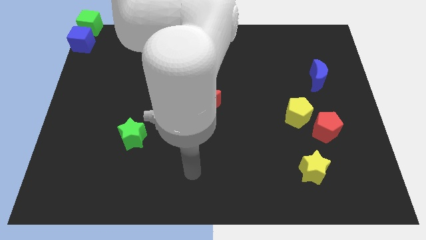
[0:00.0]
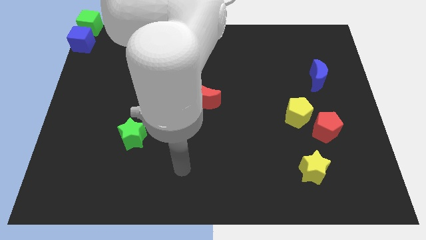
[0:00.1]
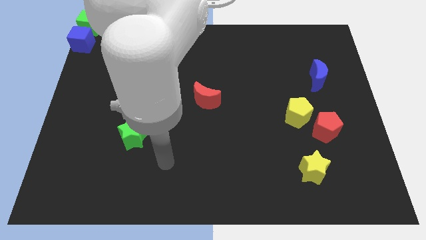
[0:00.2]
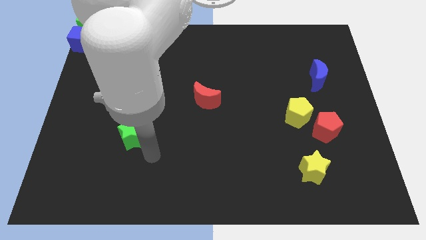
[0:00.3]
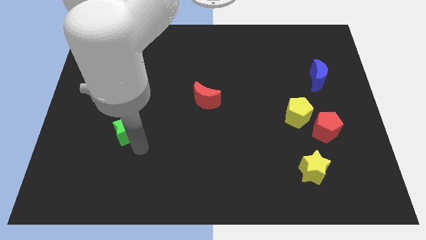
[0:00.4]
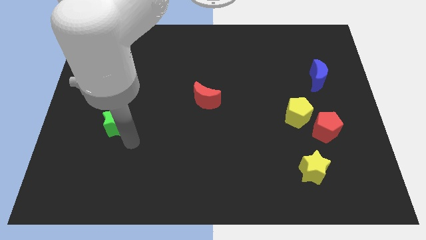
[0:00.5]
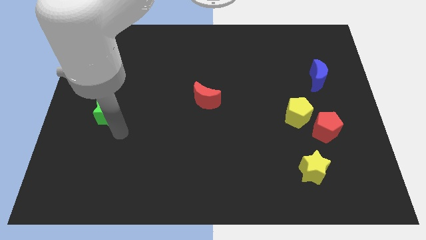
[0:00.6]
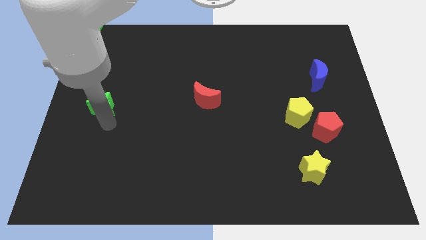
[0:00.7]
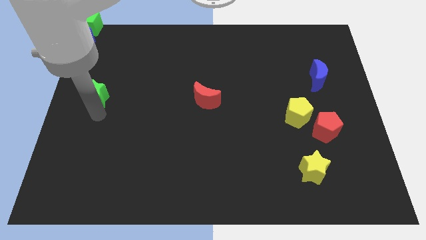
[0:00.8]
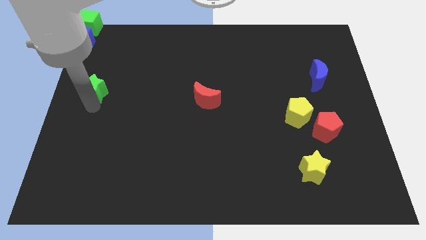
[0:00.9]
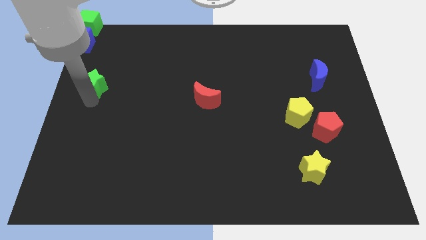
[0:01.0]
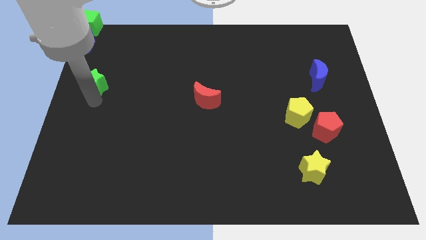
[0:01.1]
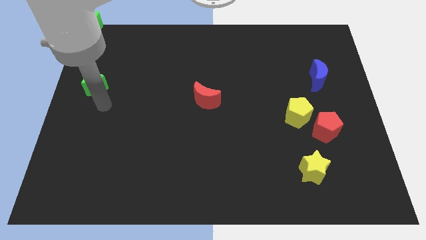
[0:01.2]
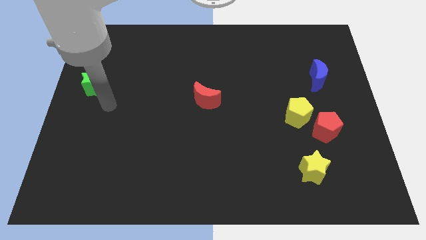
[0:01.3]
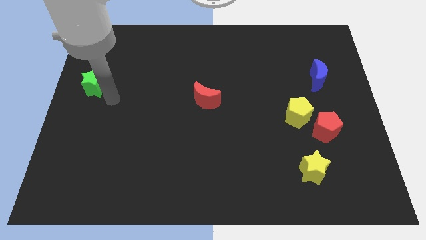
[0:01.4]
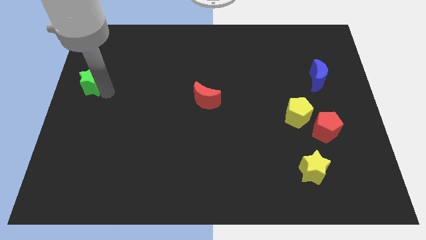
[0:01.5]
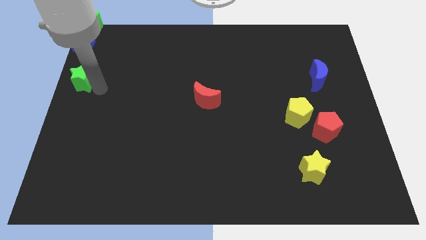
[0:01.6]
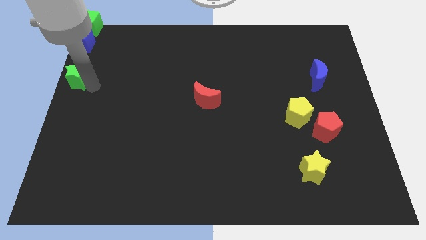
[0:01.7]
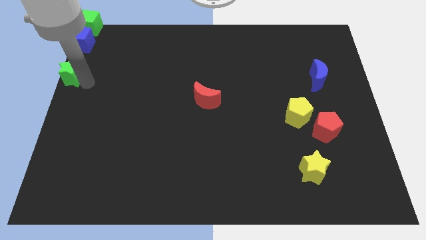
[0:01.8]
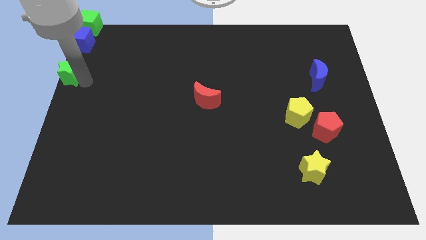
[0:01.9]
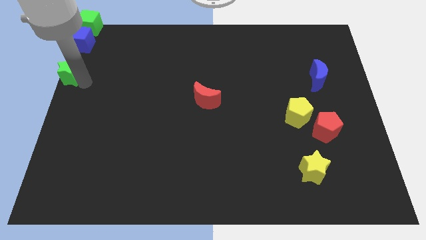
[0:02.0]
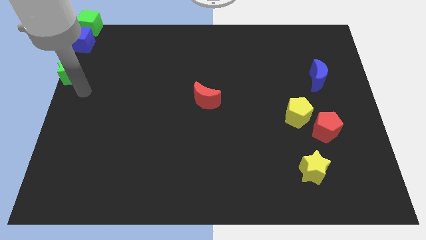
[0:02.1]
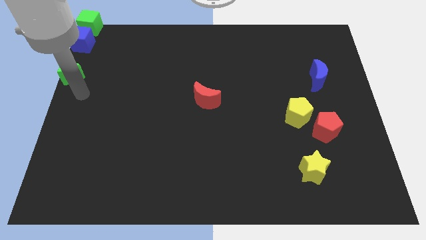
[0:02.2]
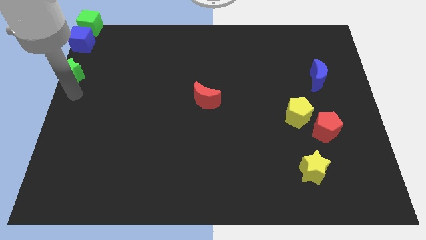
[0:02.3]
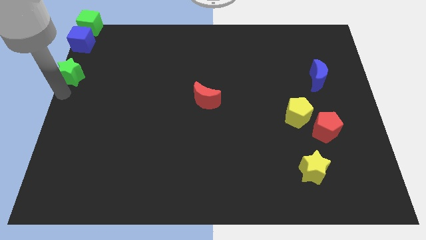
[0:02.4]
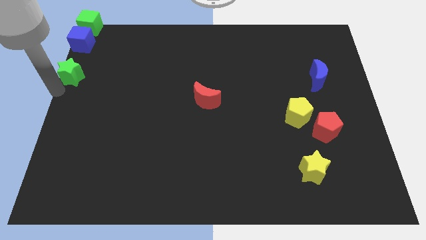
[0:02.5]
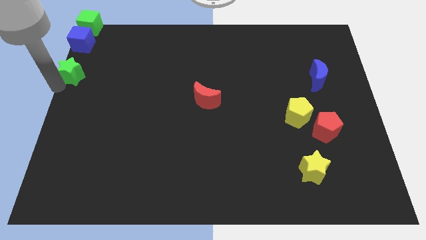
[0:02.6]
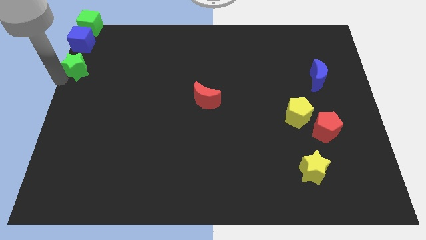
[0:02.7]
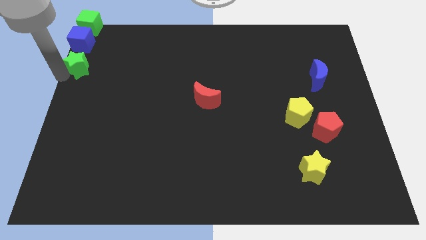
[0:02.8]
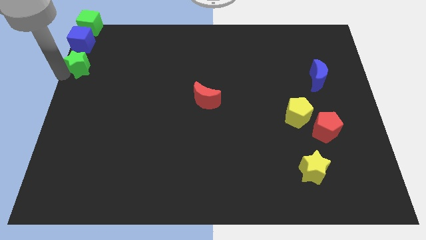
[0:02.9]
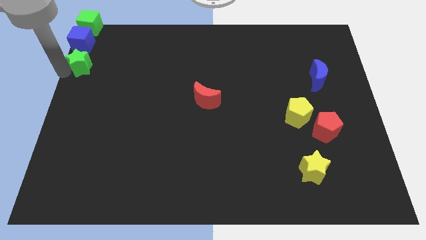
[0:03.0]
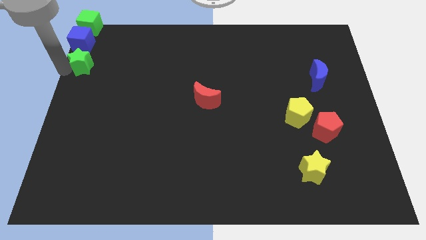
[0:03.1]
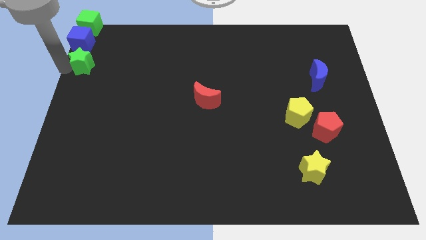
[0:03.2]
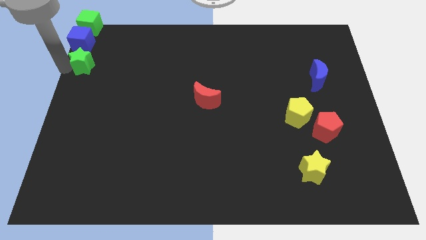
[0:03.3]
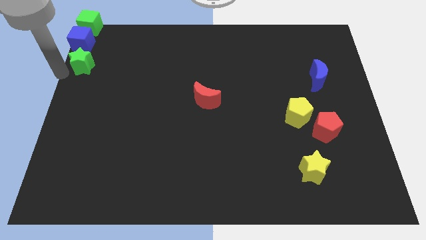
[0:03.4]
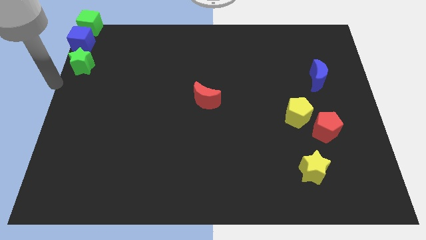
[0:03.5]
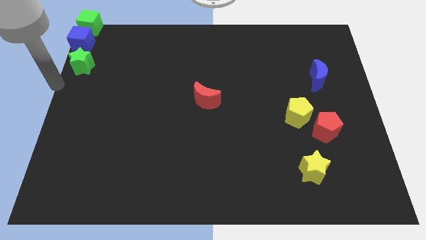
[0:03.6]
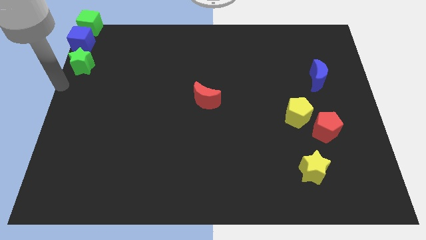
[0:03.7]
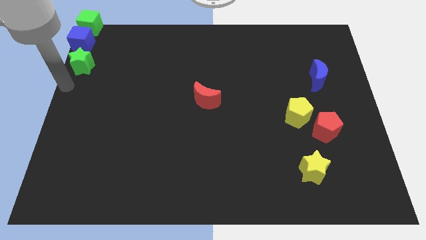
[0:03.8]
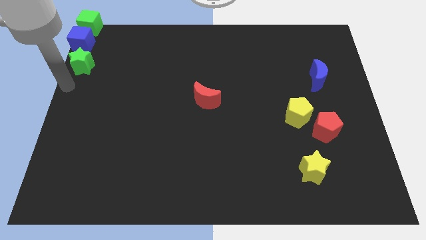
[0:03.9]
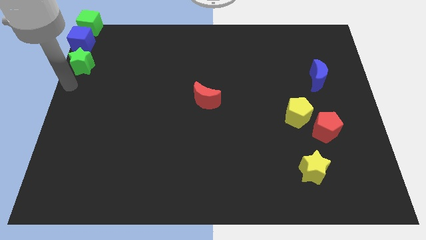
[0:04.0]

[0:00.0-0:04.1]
push the green star to the bottom of the blue cube

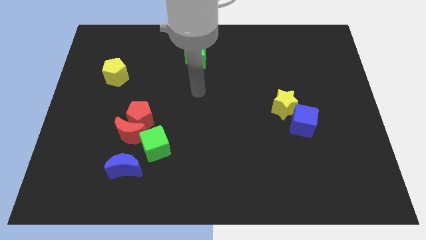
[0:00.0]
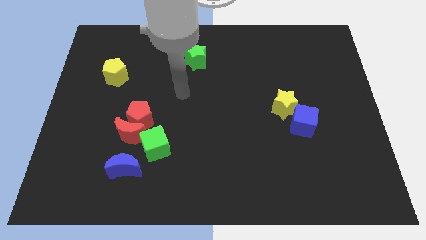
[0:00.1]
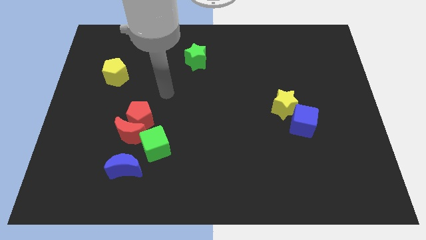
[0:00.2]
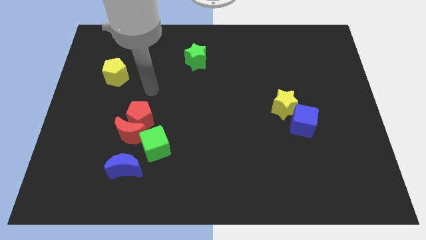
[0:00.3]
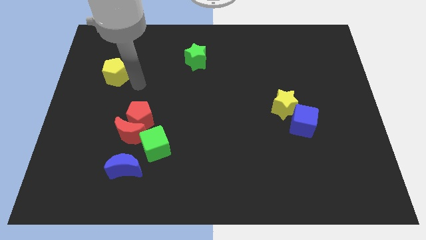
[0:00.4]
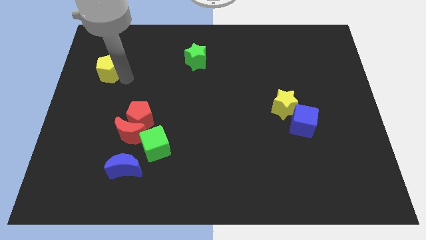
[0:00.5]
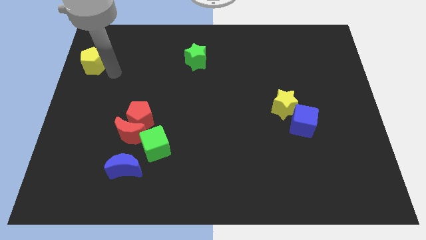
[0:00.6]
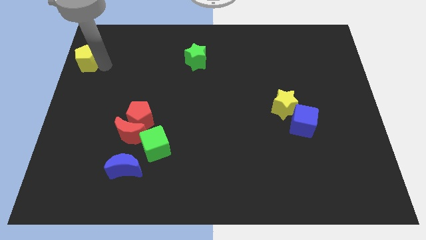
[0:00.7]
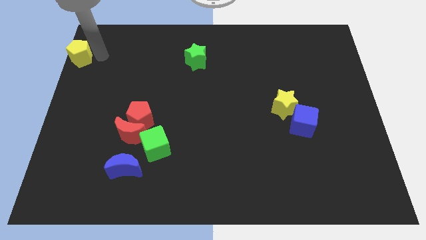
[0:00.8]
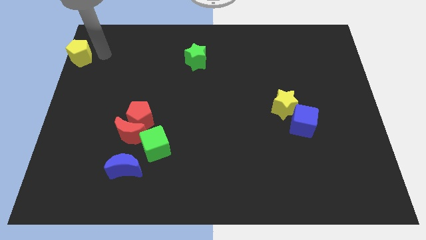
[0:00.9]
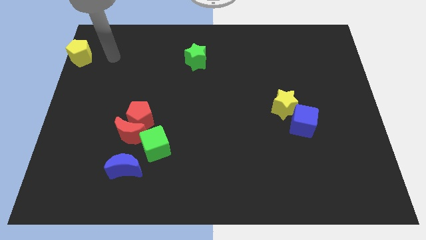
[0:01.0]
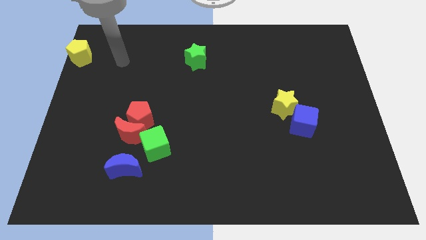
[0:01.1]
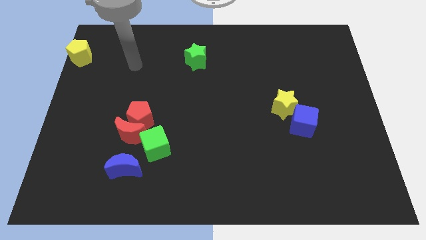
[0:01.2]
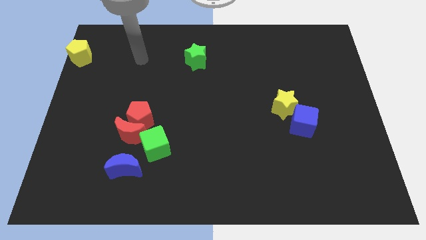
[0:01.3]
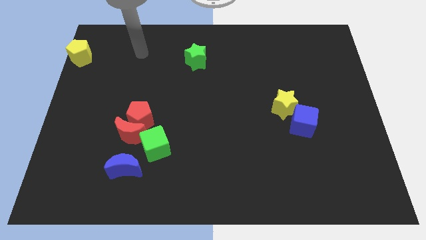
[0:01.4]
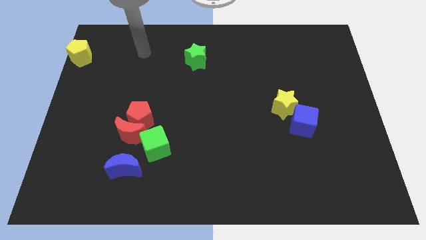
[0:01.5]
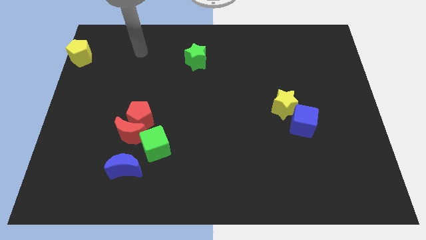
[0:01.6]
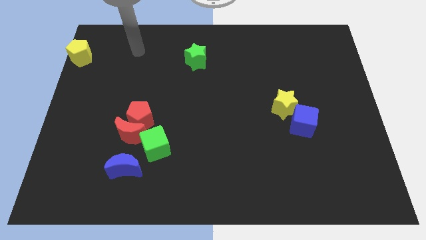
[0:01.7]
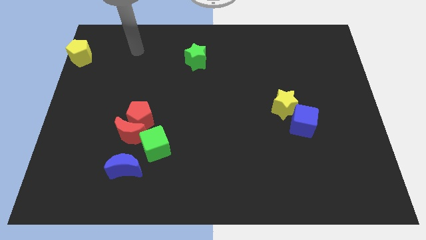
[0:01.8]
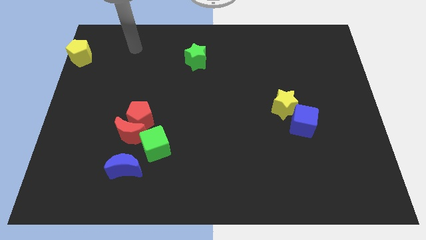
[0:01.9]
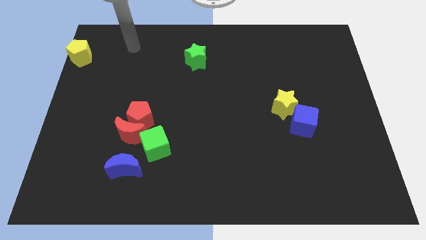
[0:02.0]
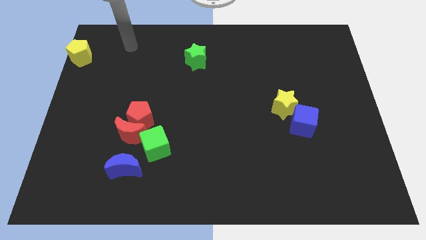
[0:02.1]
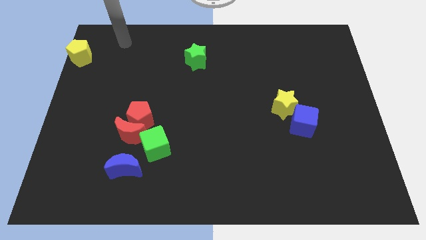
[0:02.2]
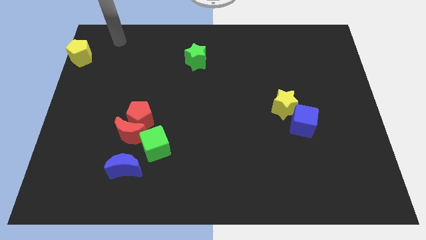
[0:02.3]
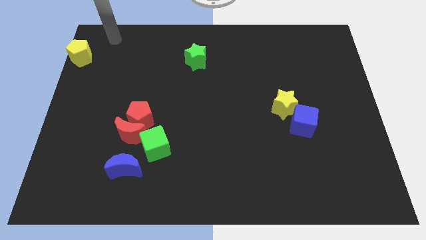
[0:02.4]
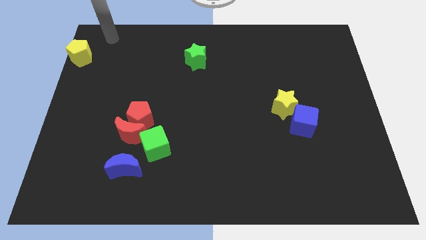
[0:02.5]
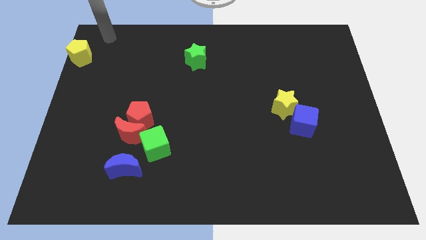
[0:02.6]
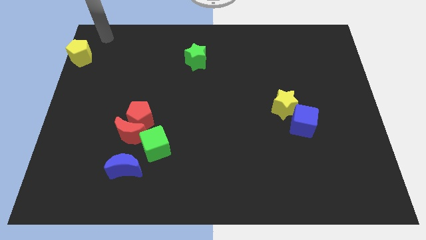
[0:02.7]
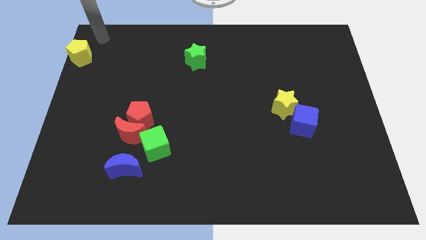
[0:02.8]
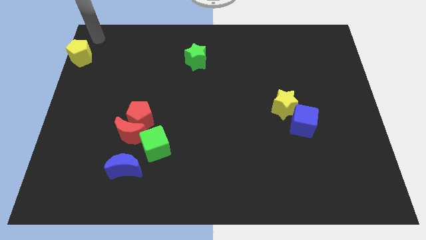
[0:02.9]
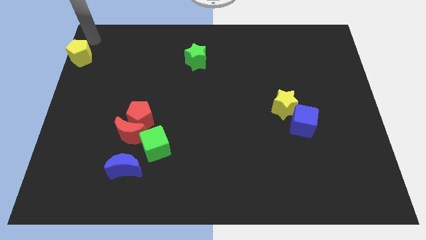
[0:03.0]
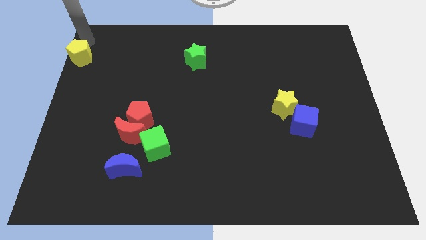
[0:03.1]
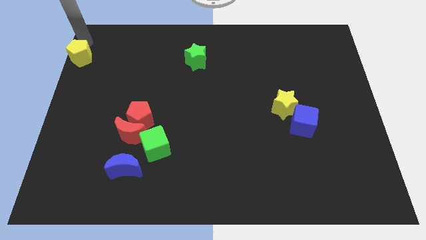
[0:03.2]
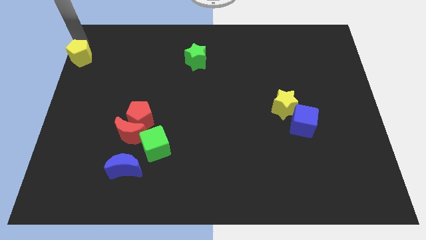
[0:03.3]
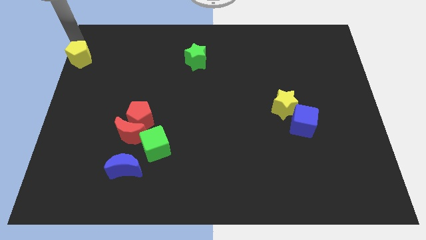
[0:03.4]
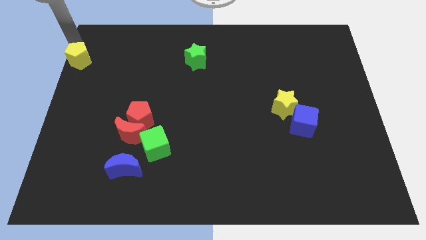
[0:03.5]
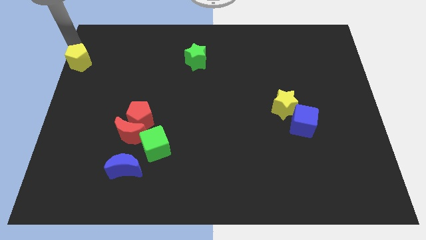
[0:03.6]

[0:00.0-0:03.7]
push the yellow pentagon towards the left side of the board

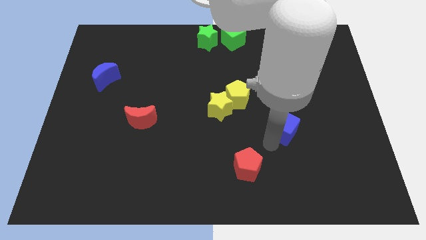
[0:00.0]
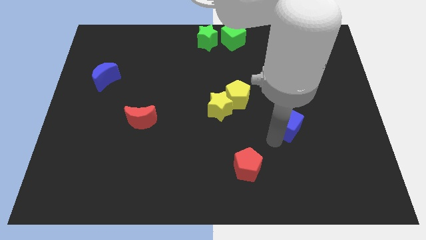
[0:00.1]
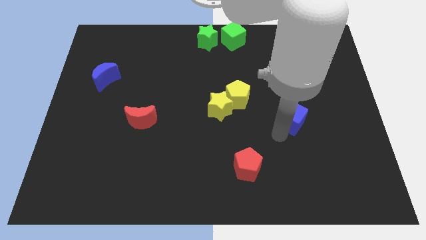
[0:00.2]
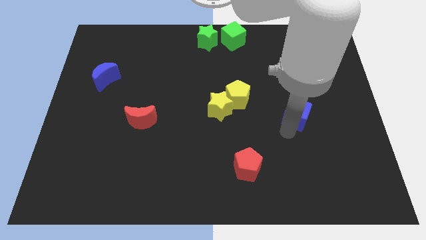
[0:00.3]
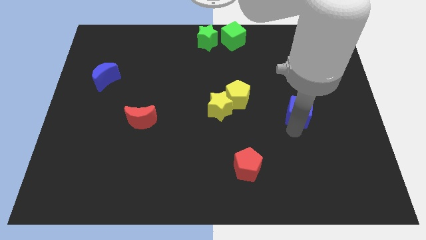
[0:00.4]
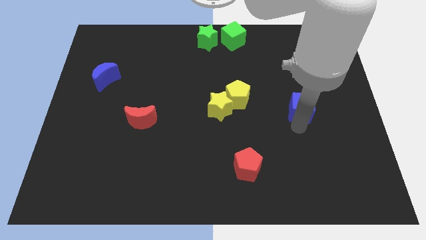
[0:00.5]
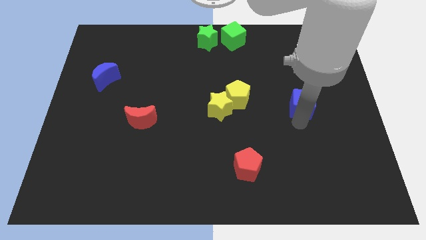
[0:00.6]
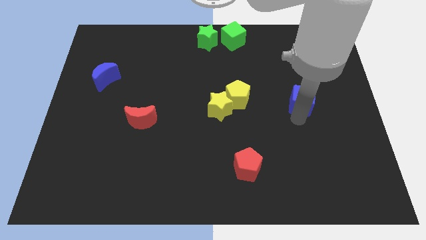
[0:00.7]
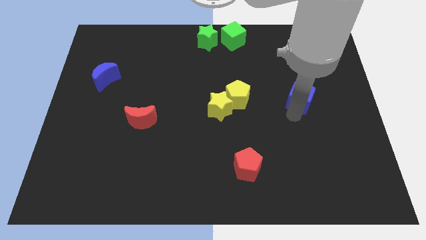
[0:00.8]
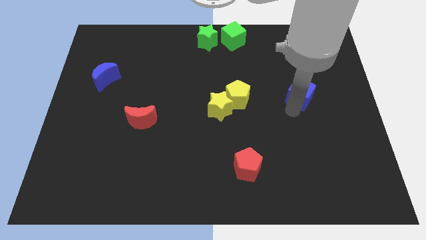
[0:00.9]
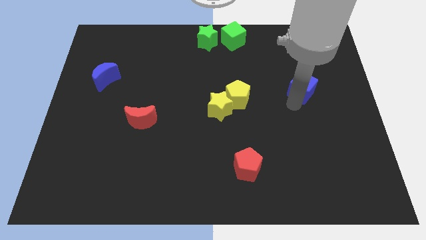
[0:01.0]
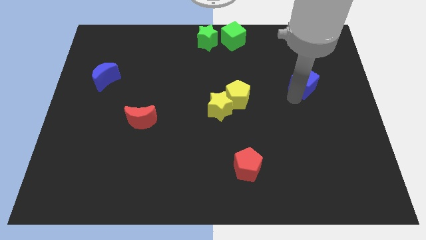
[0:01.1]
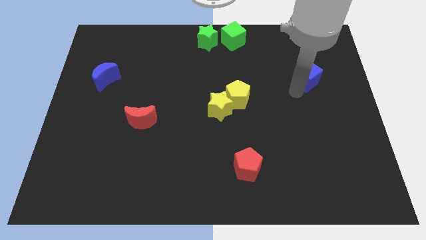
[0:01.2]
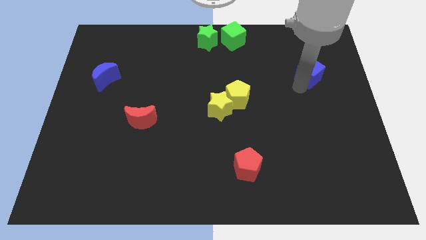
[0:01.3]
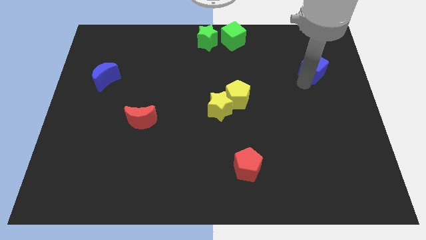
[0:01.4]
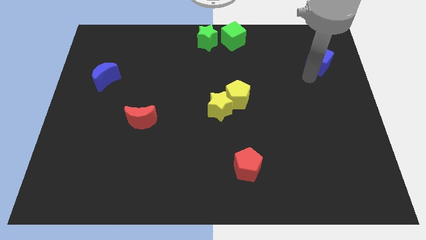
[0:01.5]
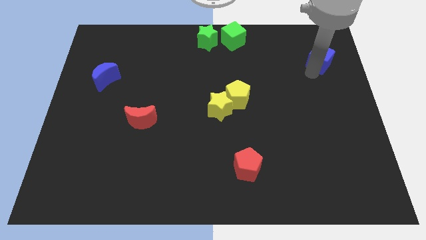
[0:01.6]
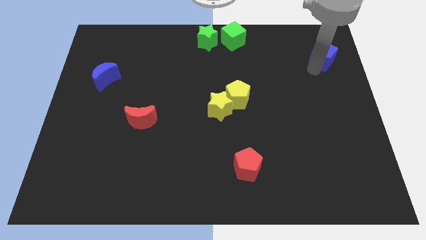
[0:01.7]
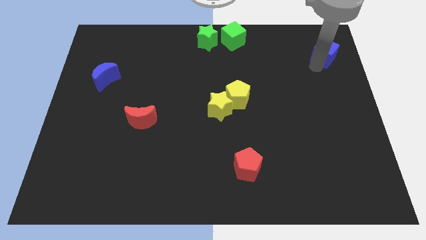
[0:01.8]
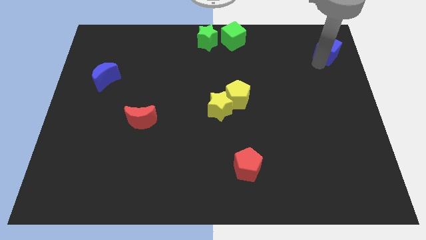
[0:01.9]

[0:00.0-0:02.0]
push the blue cube towards the top right corner
